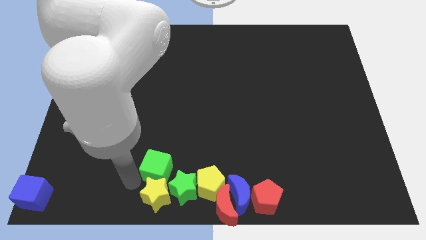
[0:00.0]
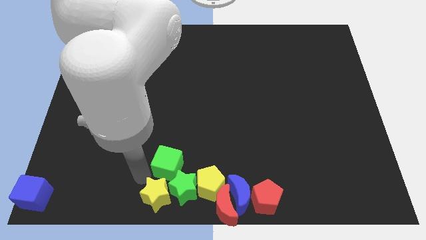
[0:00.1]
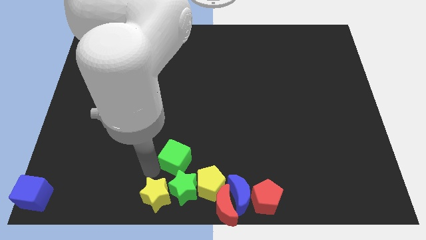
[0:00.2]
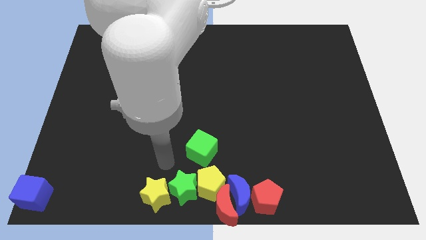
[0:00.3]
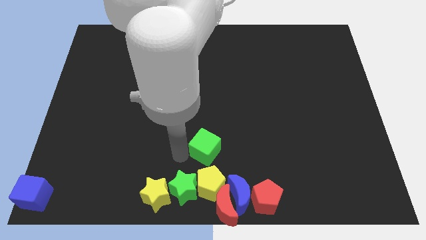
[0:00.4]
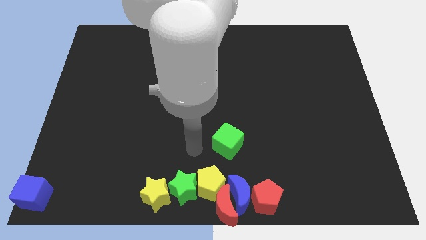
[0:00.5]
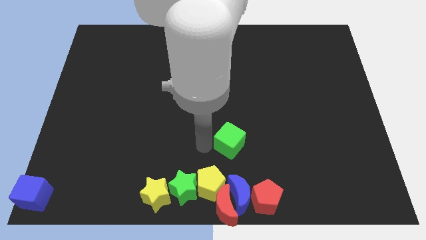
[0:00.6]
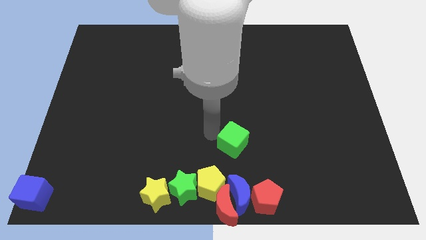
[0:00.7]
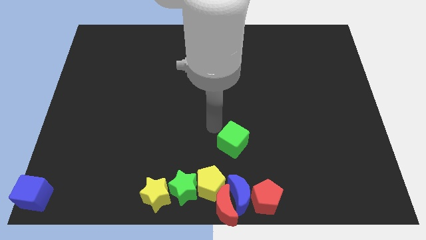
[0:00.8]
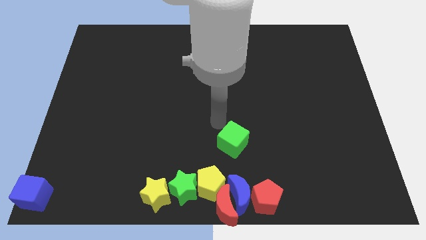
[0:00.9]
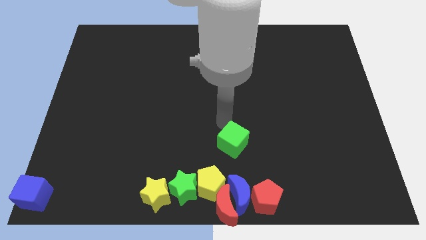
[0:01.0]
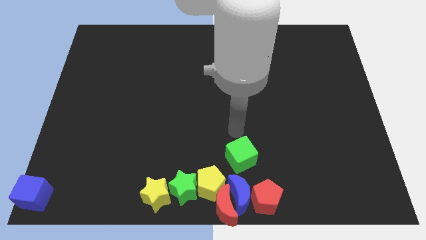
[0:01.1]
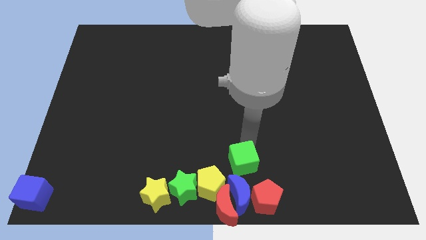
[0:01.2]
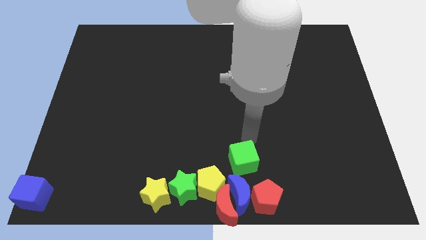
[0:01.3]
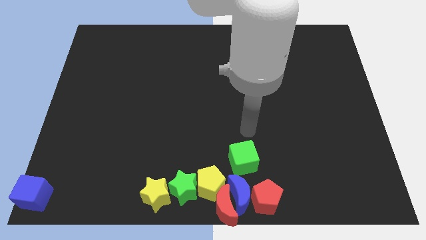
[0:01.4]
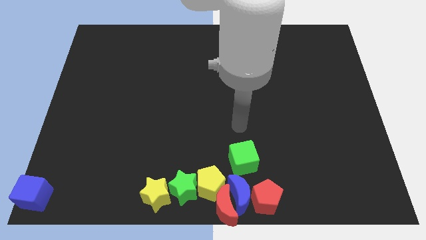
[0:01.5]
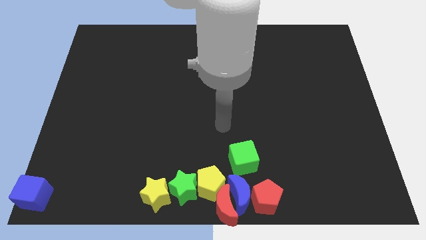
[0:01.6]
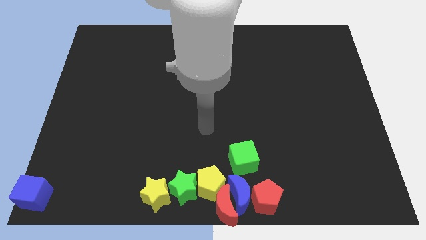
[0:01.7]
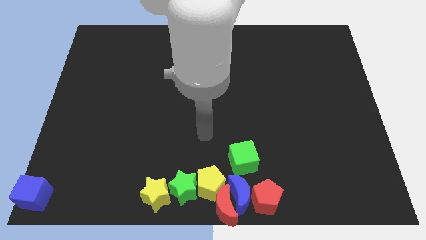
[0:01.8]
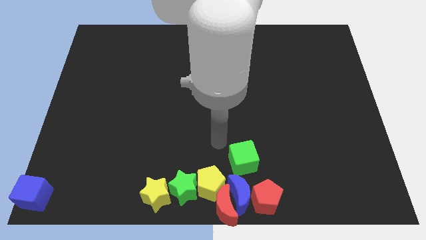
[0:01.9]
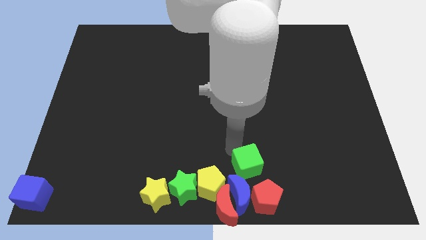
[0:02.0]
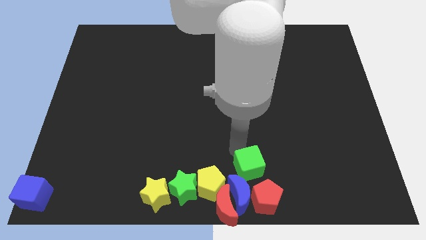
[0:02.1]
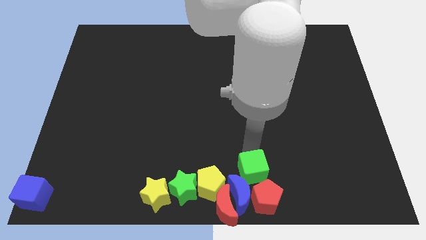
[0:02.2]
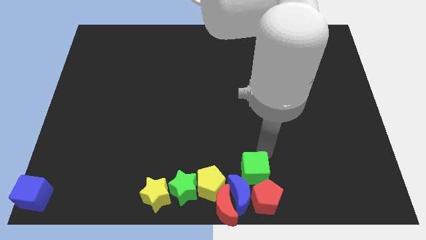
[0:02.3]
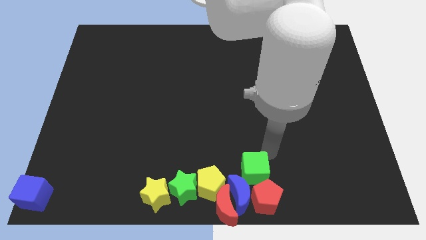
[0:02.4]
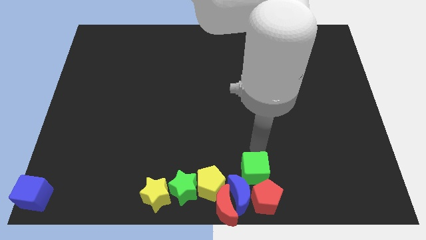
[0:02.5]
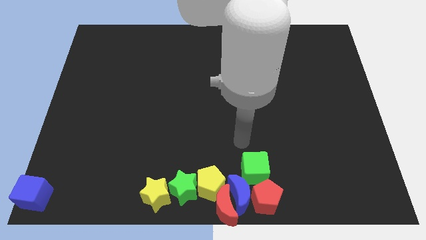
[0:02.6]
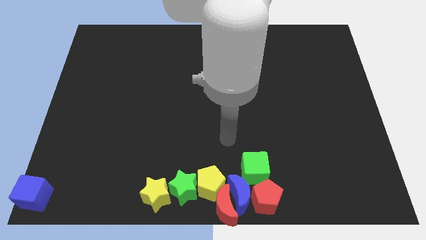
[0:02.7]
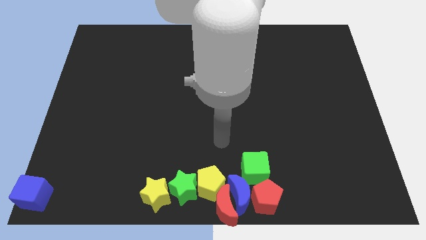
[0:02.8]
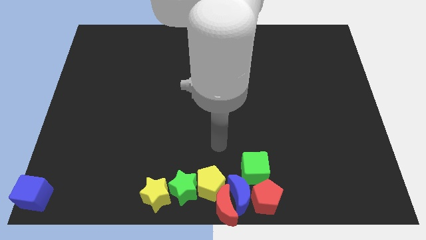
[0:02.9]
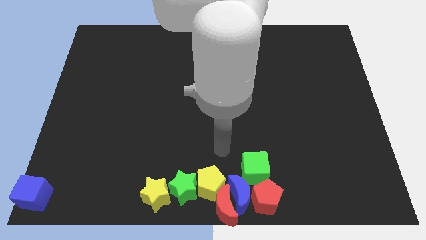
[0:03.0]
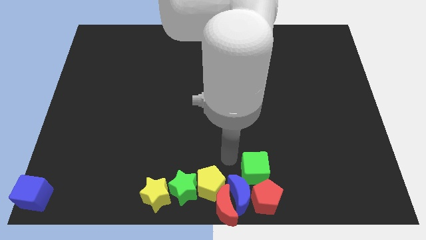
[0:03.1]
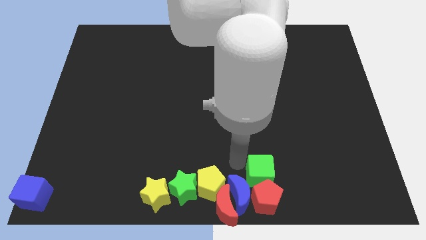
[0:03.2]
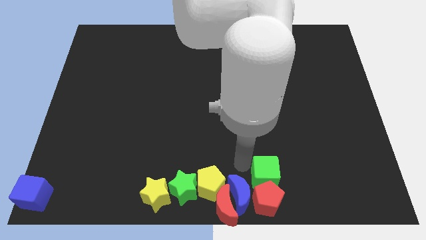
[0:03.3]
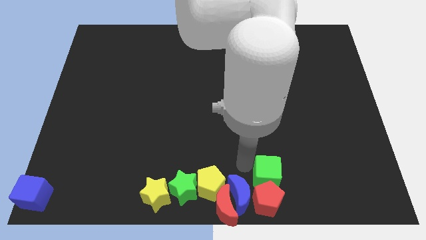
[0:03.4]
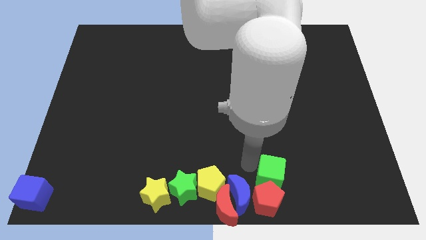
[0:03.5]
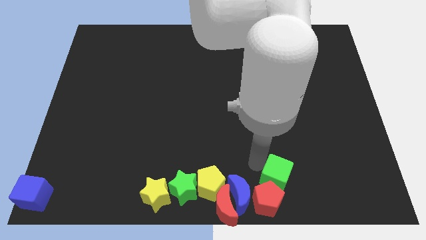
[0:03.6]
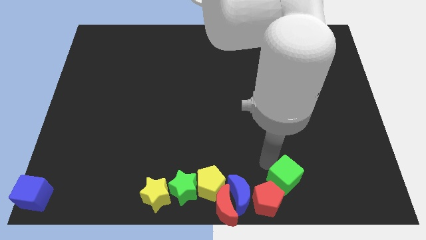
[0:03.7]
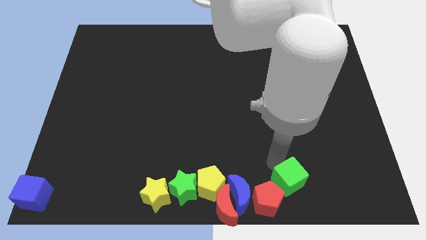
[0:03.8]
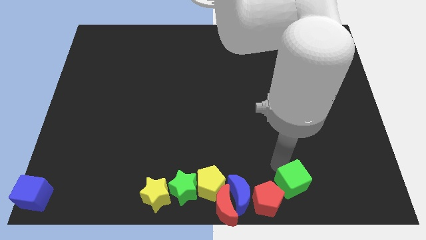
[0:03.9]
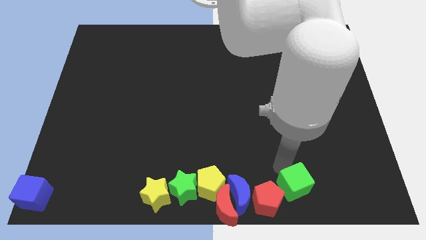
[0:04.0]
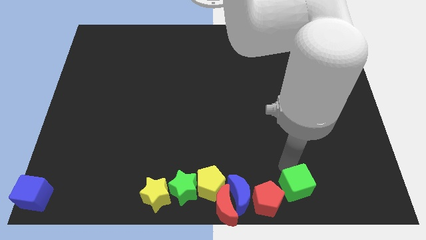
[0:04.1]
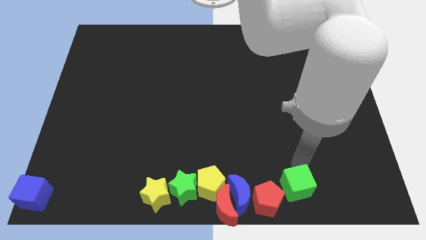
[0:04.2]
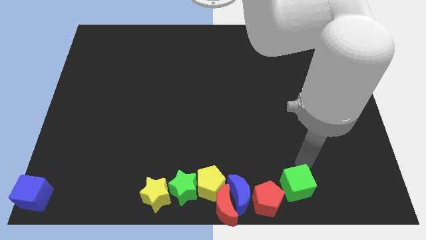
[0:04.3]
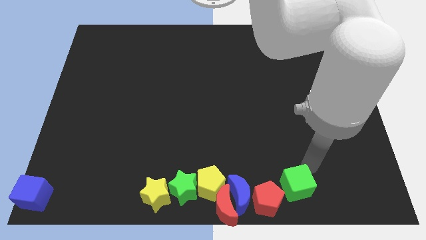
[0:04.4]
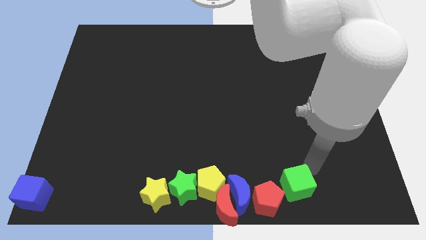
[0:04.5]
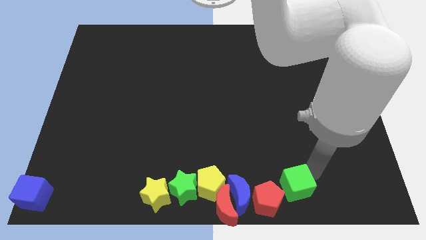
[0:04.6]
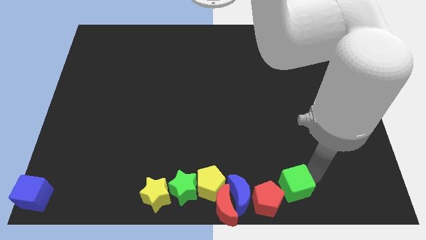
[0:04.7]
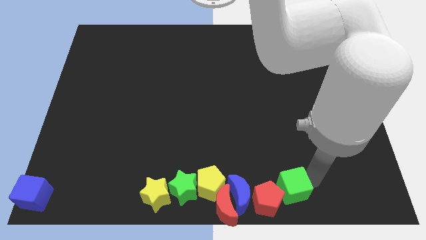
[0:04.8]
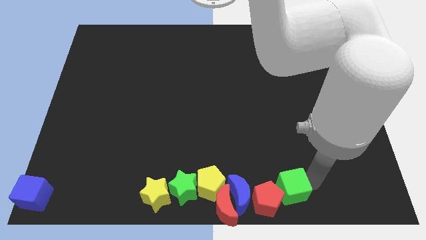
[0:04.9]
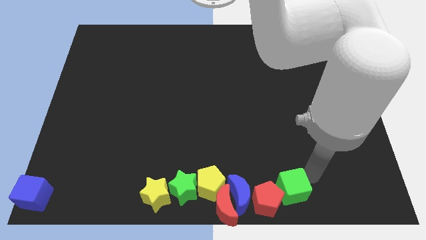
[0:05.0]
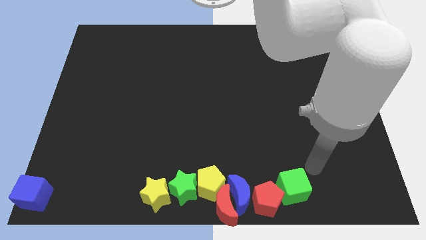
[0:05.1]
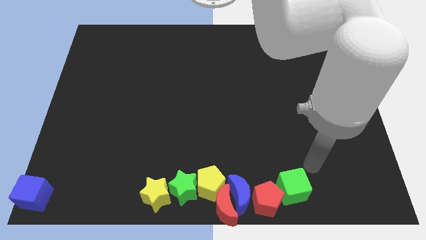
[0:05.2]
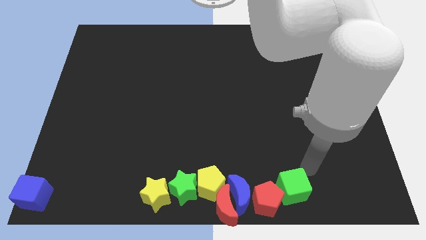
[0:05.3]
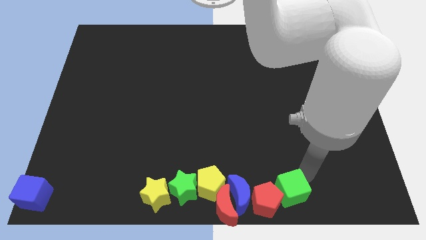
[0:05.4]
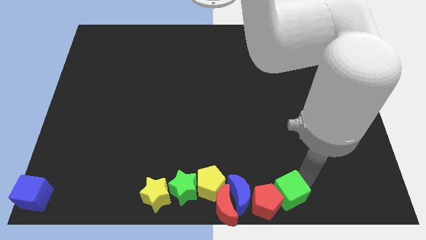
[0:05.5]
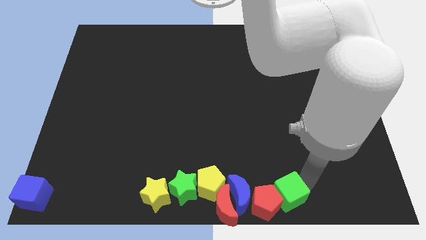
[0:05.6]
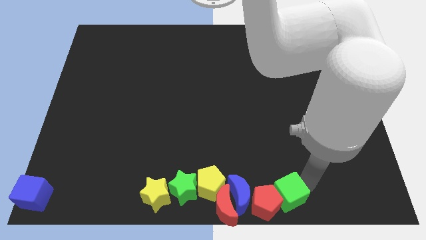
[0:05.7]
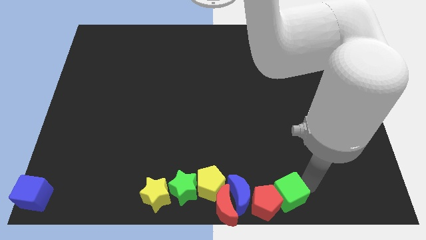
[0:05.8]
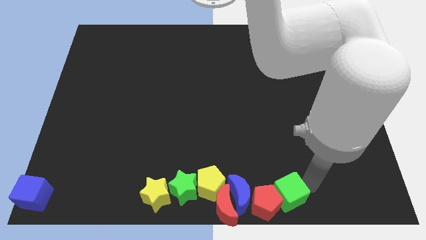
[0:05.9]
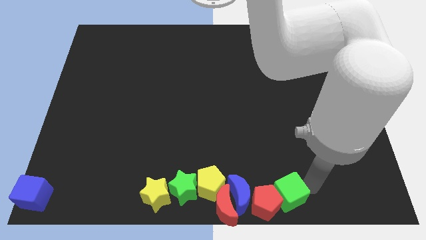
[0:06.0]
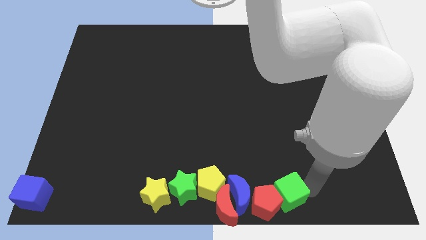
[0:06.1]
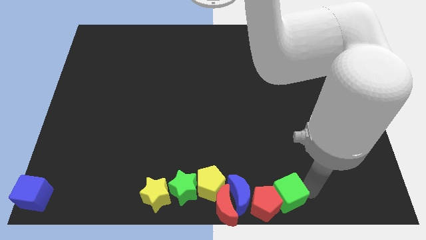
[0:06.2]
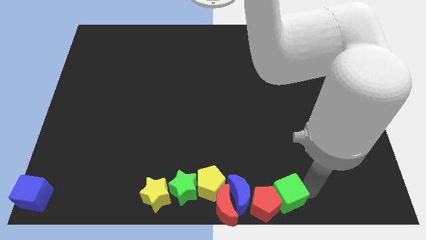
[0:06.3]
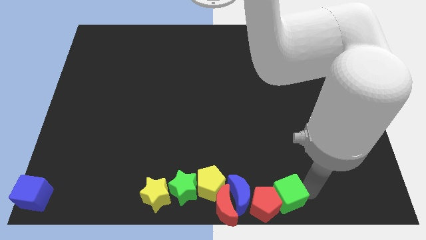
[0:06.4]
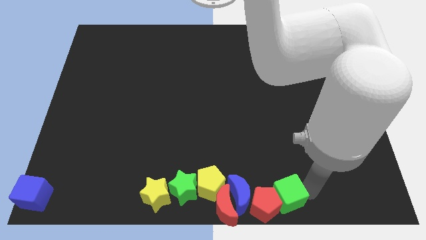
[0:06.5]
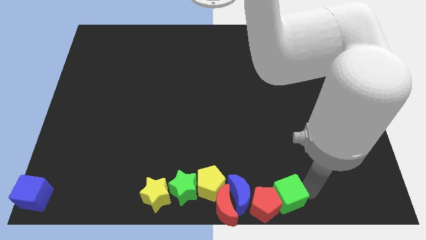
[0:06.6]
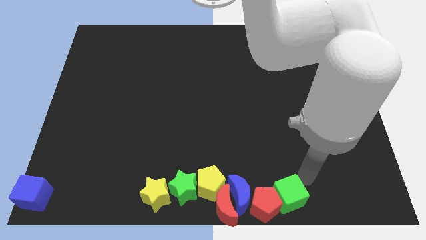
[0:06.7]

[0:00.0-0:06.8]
push the green cube to the right of the red pentagon

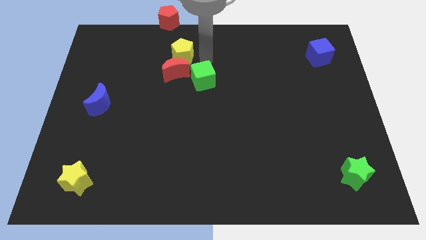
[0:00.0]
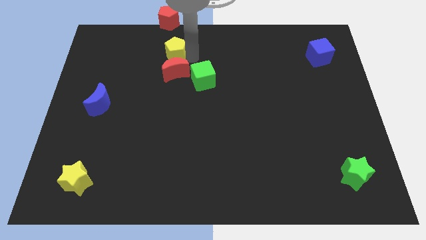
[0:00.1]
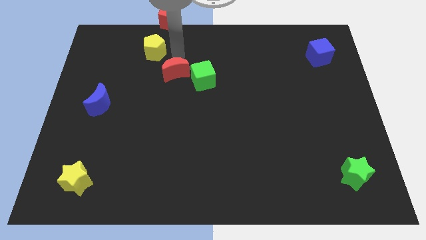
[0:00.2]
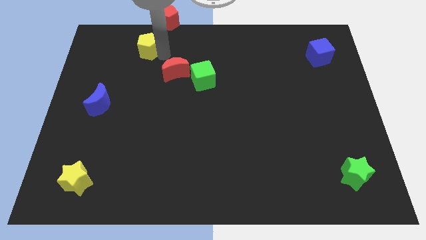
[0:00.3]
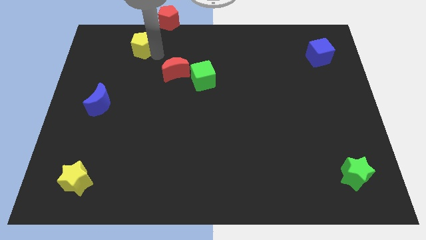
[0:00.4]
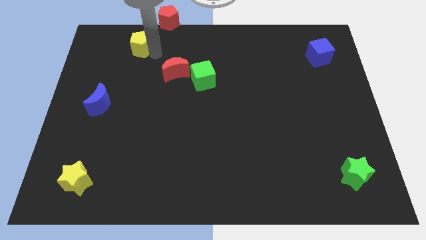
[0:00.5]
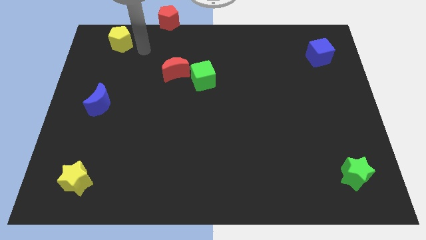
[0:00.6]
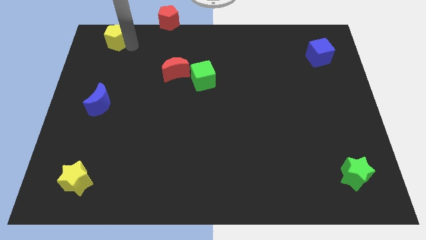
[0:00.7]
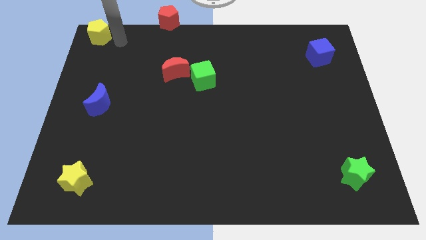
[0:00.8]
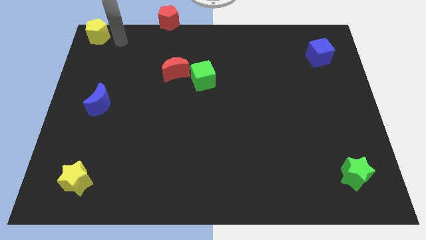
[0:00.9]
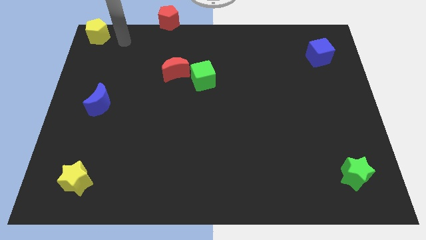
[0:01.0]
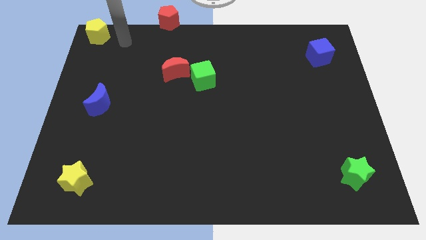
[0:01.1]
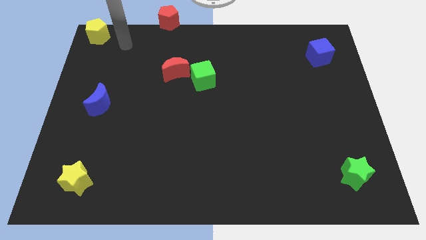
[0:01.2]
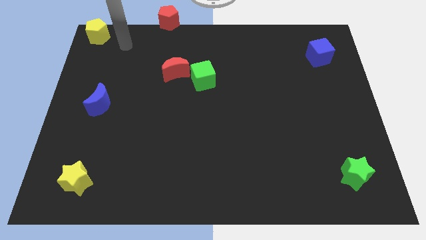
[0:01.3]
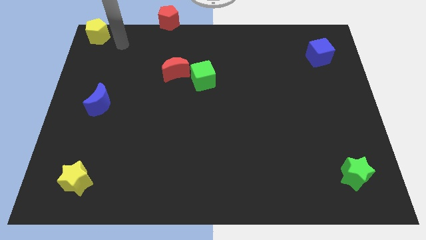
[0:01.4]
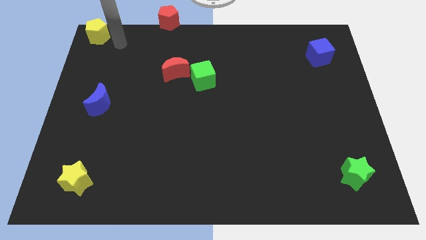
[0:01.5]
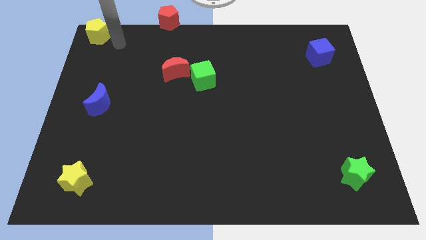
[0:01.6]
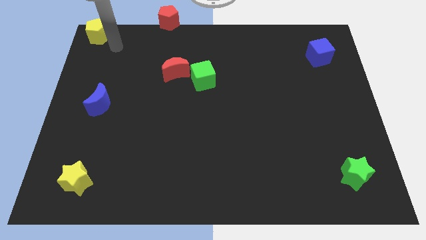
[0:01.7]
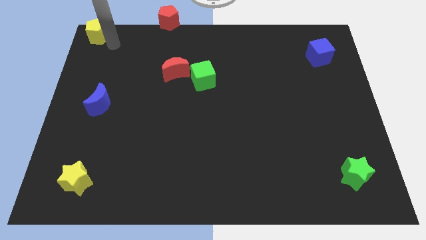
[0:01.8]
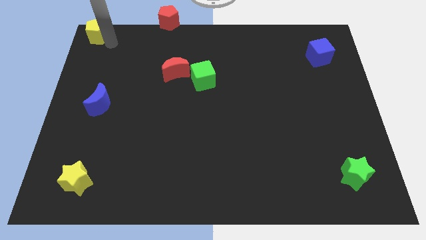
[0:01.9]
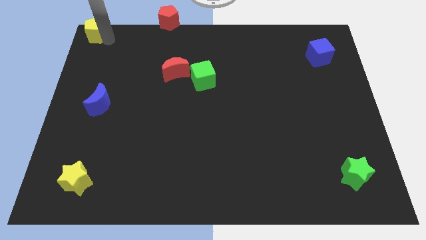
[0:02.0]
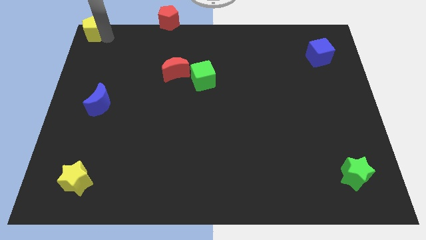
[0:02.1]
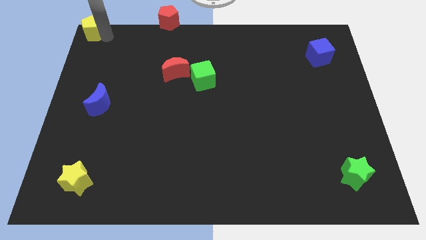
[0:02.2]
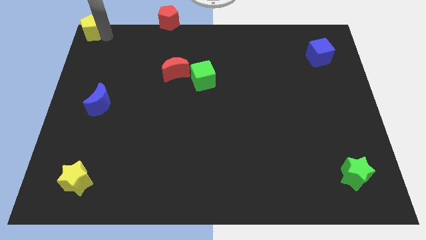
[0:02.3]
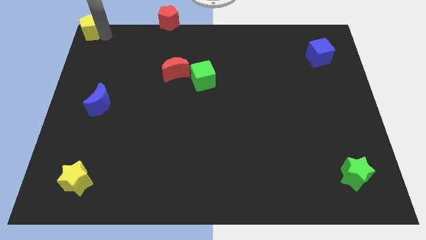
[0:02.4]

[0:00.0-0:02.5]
place yellow pentagon to the top left corner of the board
